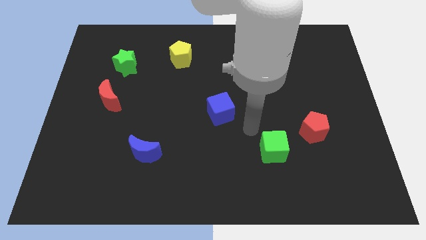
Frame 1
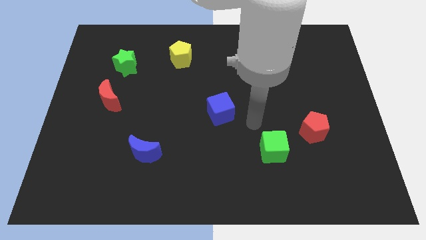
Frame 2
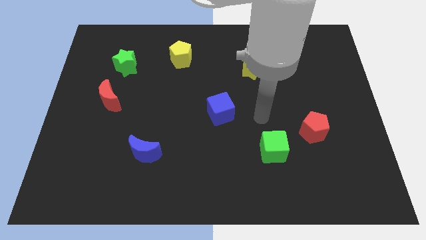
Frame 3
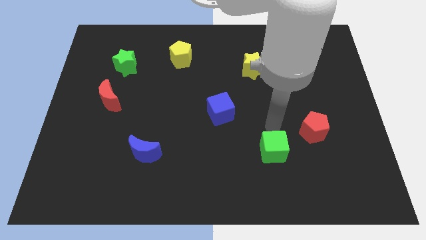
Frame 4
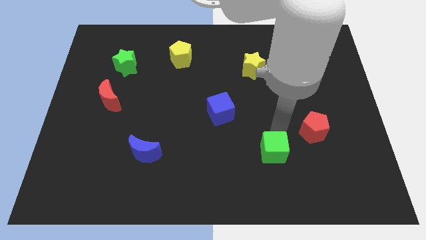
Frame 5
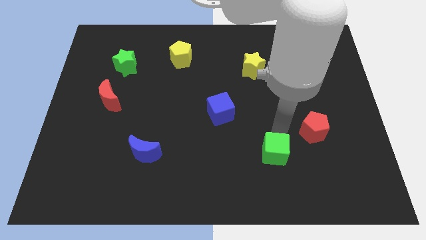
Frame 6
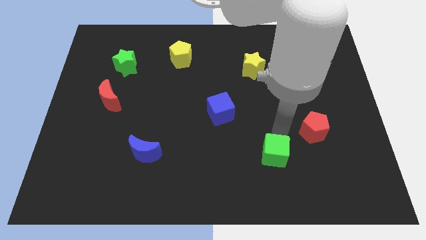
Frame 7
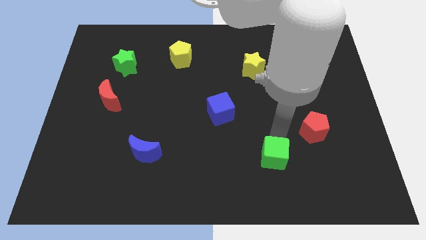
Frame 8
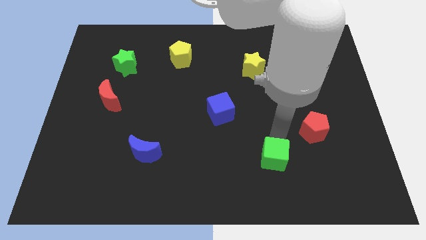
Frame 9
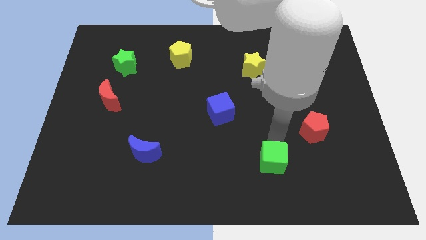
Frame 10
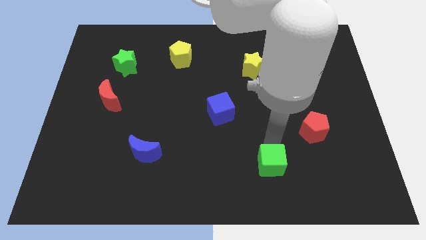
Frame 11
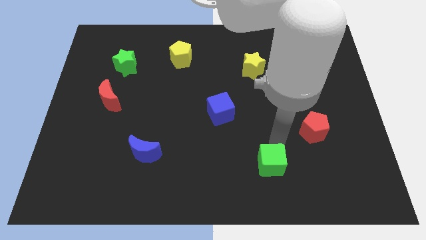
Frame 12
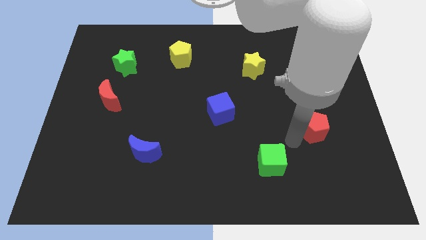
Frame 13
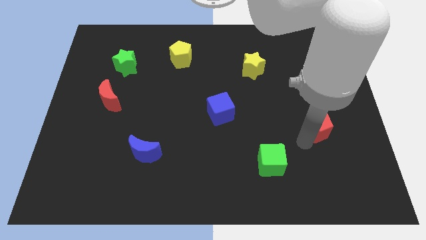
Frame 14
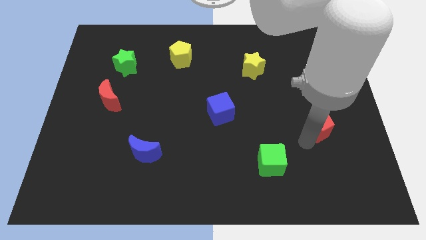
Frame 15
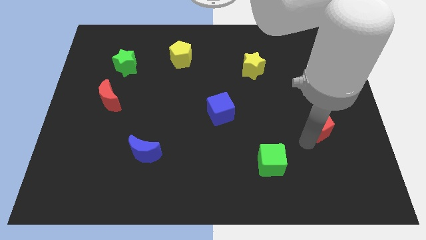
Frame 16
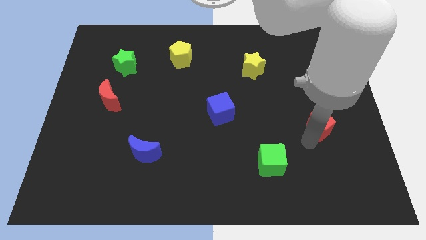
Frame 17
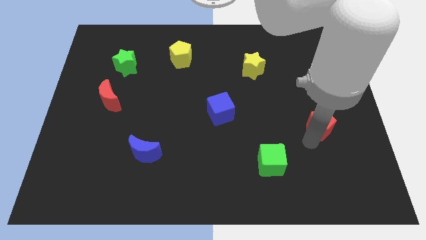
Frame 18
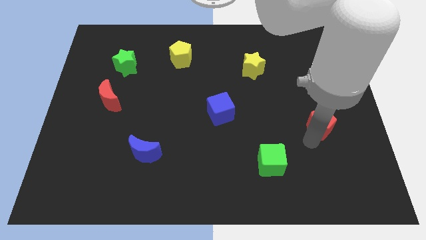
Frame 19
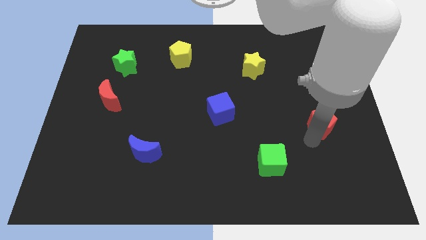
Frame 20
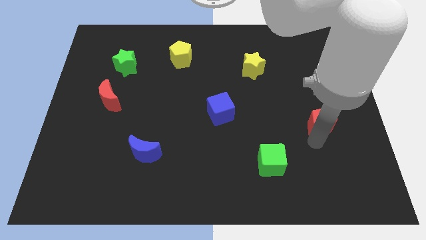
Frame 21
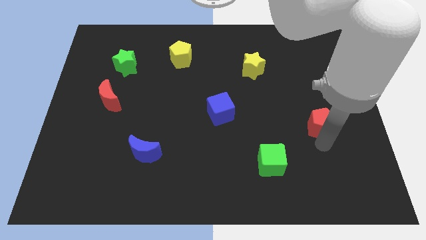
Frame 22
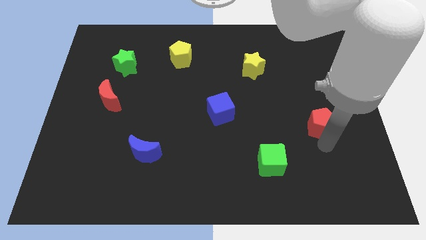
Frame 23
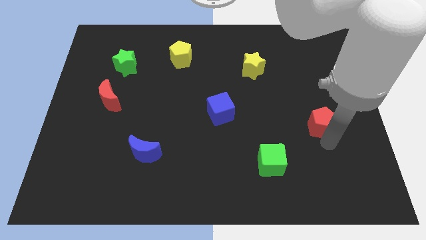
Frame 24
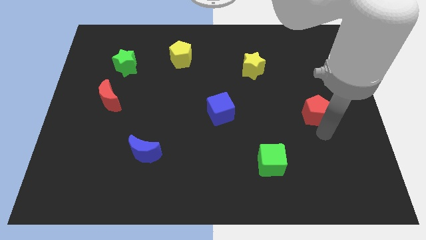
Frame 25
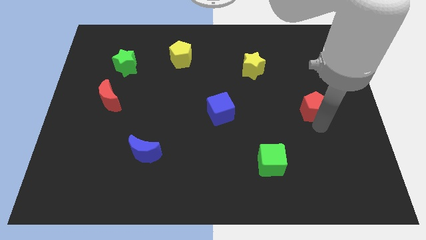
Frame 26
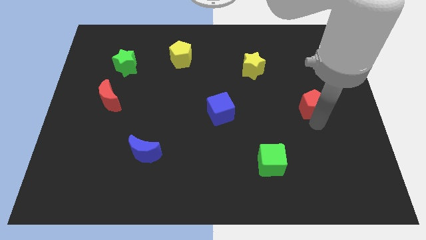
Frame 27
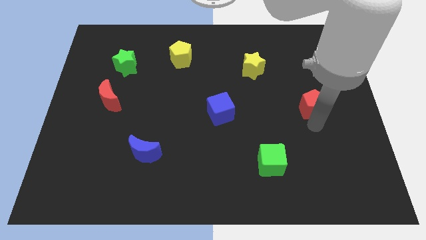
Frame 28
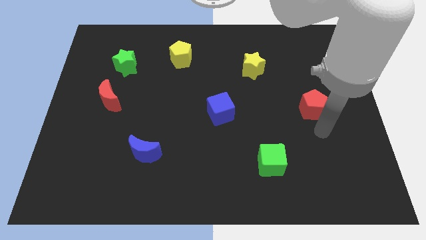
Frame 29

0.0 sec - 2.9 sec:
place the red pentagon right to the blue cube

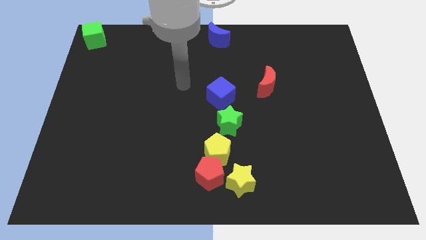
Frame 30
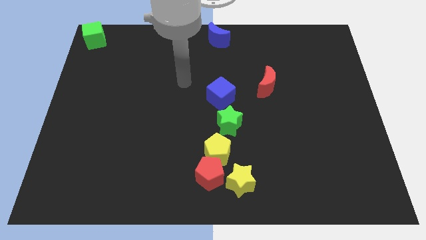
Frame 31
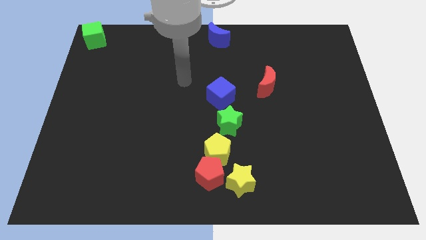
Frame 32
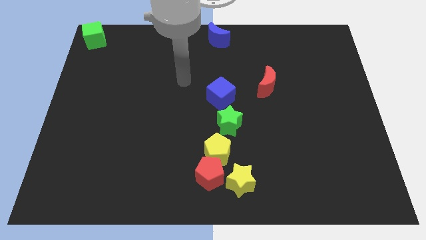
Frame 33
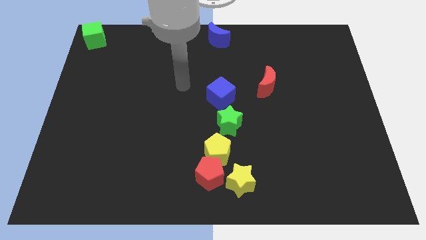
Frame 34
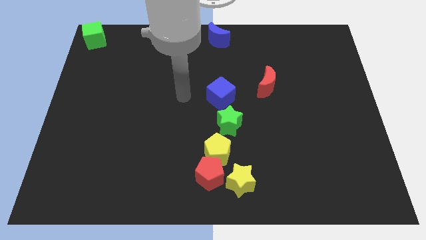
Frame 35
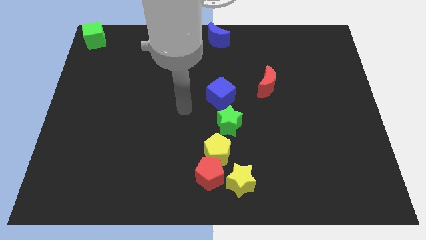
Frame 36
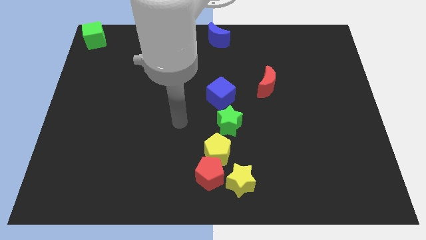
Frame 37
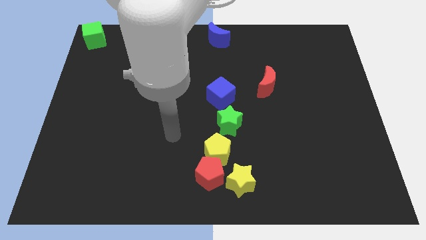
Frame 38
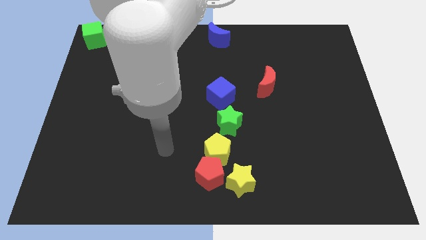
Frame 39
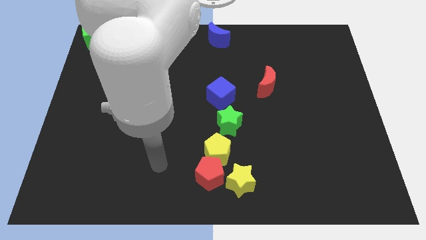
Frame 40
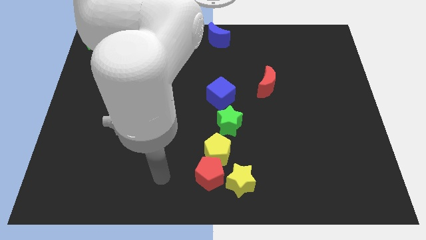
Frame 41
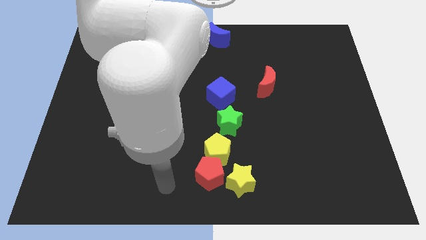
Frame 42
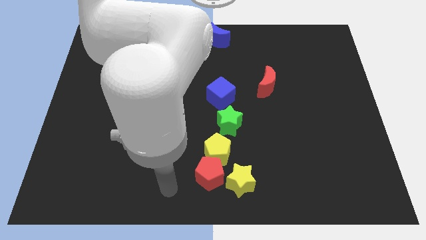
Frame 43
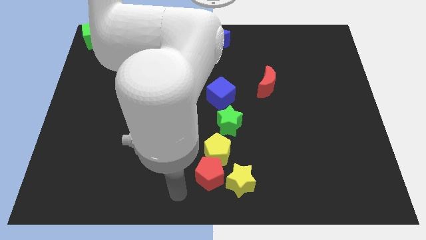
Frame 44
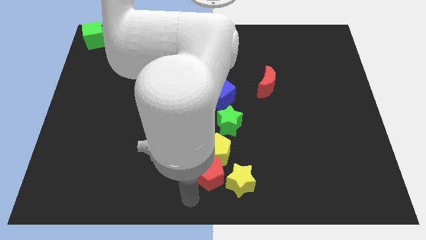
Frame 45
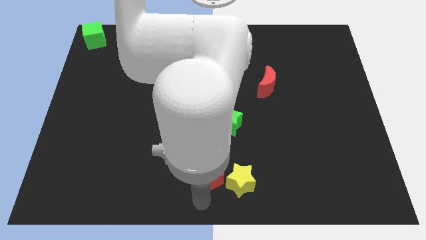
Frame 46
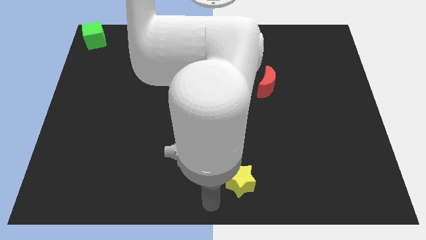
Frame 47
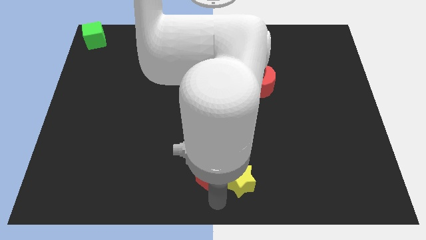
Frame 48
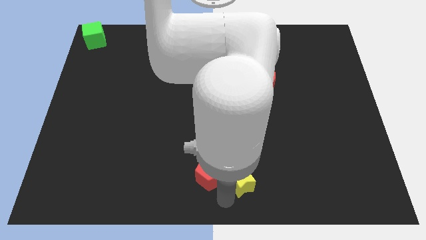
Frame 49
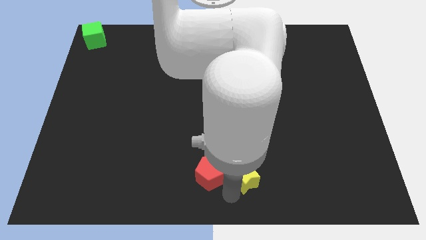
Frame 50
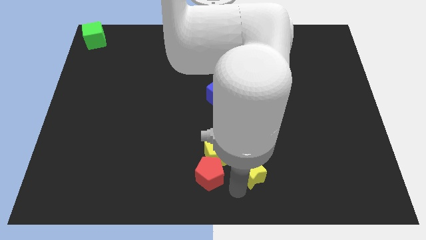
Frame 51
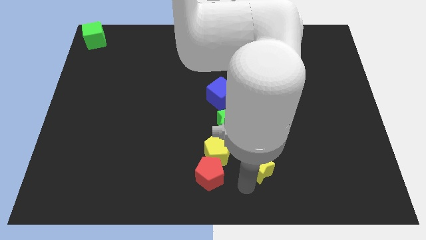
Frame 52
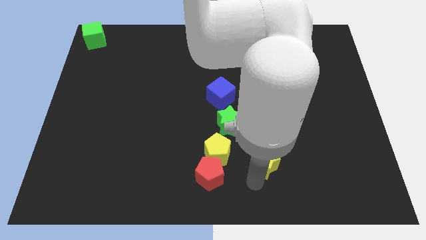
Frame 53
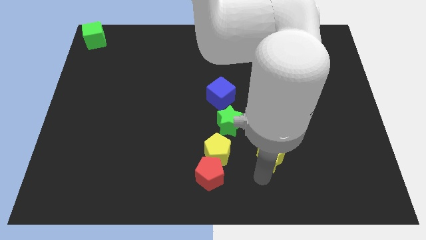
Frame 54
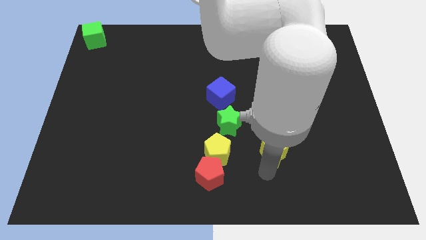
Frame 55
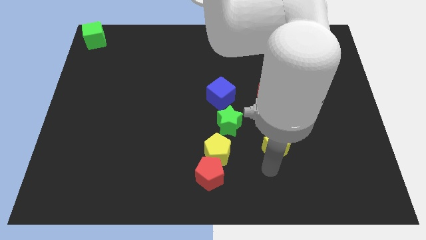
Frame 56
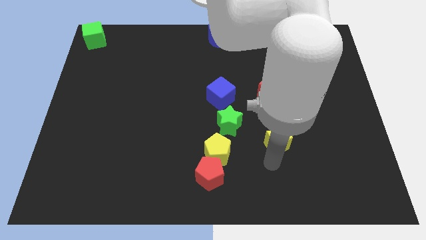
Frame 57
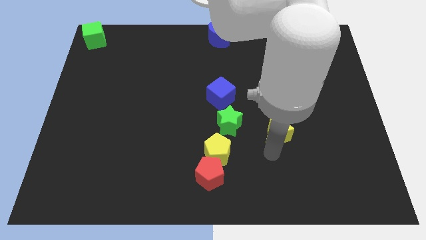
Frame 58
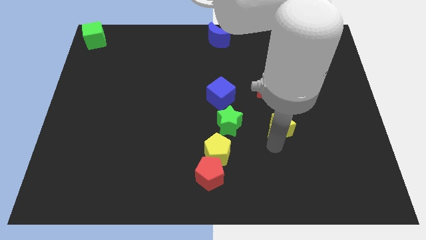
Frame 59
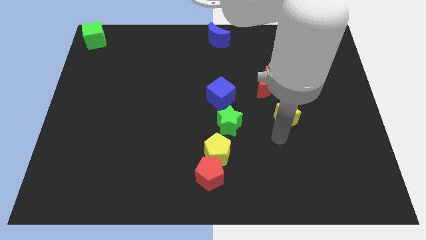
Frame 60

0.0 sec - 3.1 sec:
move your arm and move the yellow star to the right of green star

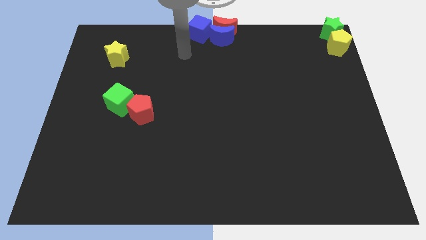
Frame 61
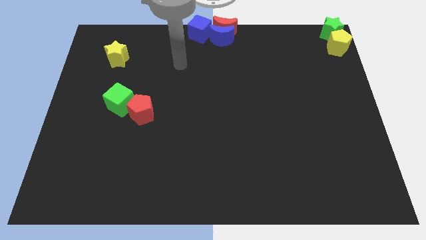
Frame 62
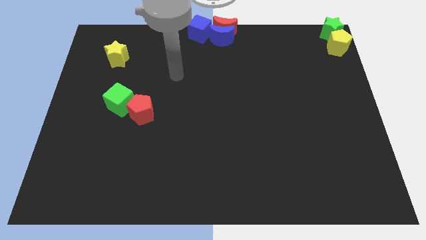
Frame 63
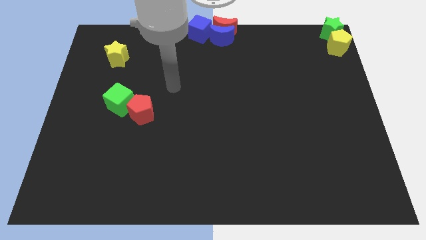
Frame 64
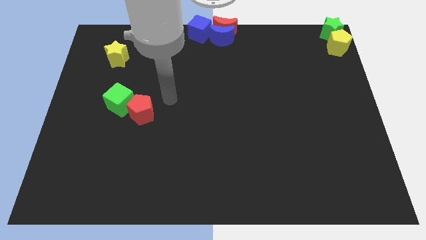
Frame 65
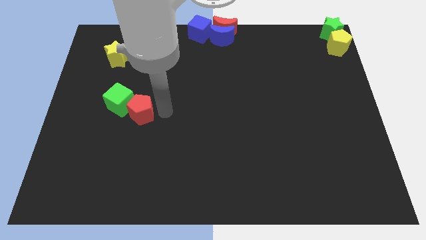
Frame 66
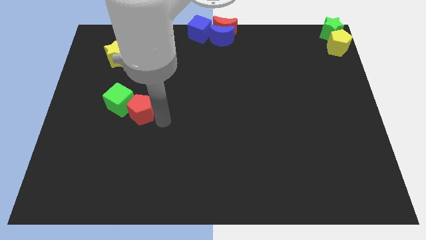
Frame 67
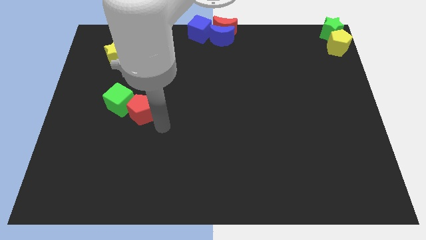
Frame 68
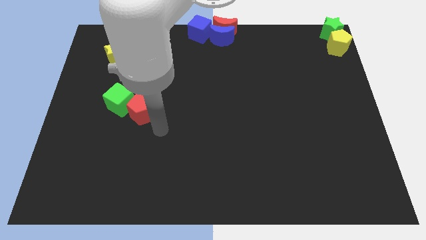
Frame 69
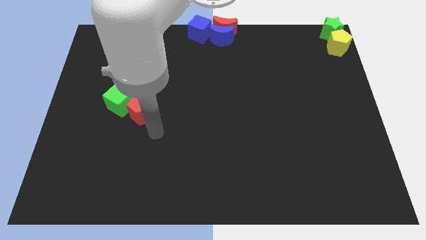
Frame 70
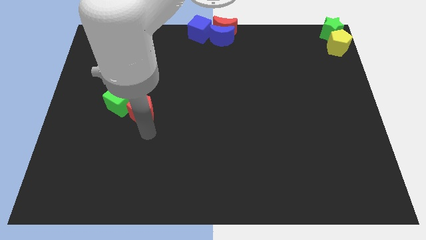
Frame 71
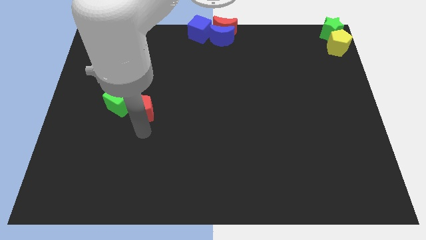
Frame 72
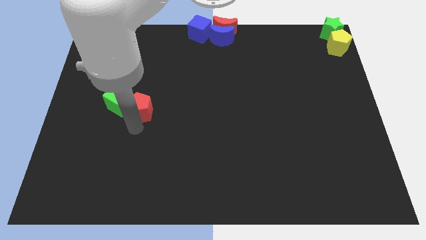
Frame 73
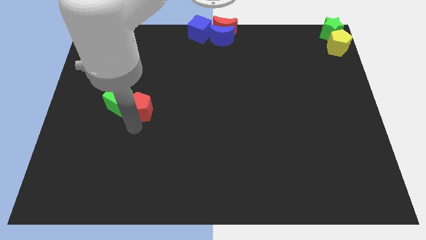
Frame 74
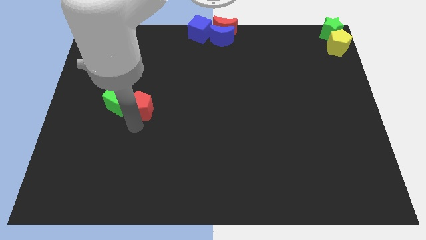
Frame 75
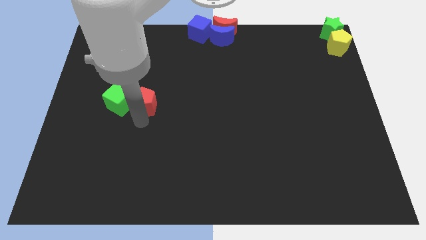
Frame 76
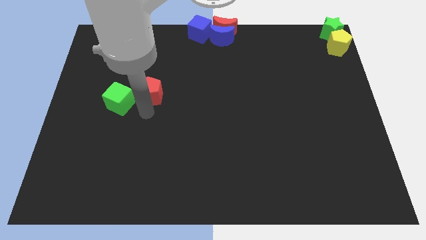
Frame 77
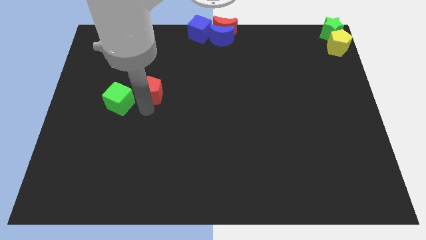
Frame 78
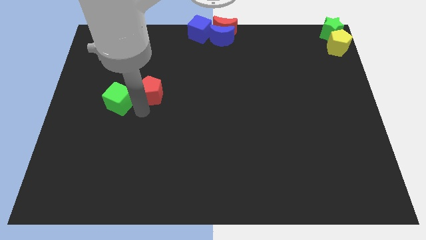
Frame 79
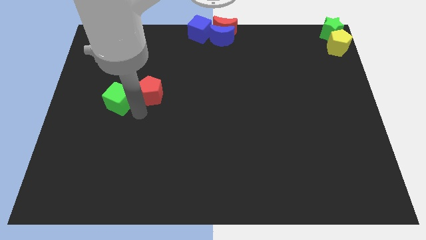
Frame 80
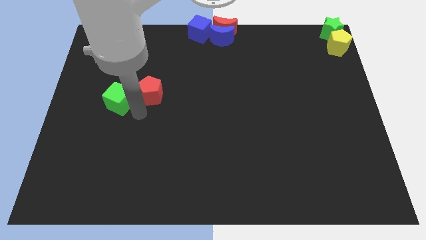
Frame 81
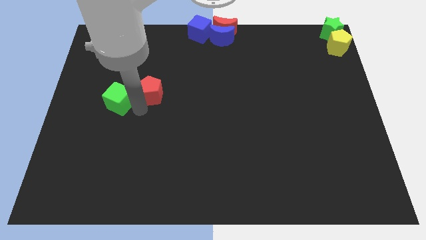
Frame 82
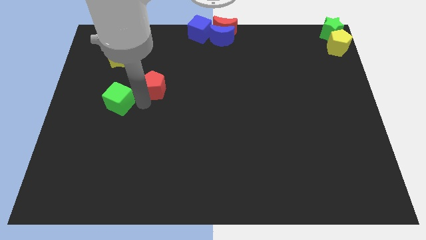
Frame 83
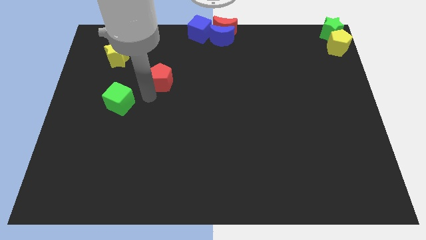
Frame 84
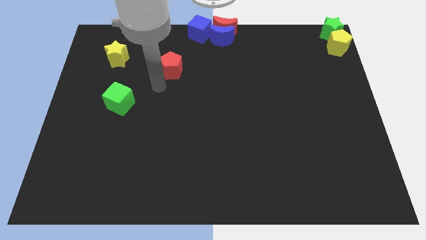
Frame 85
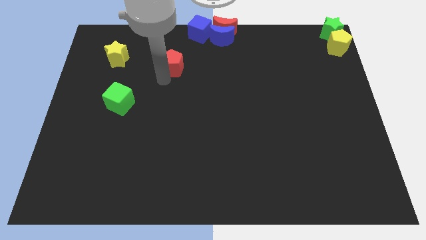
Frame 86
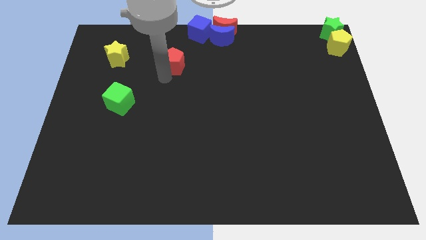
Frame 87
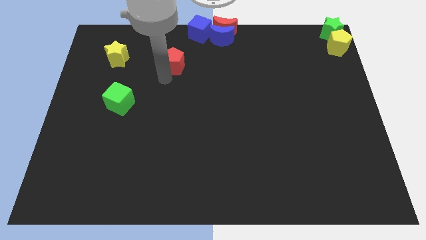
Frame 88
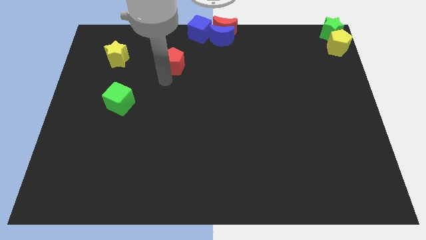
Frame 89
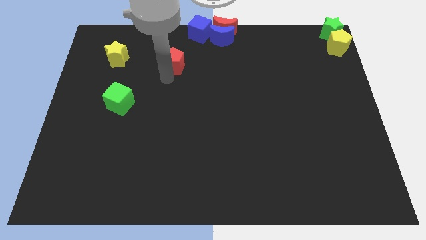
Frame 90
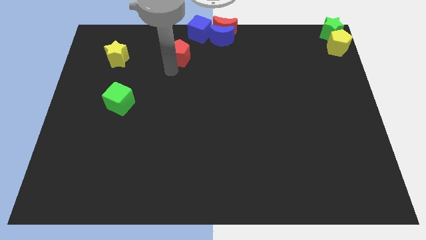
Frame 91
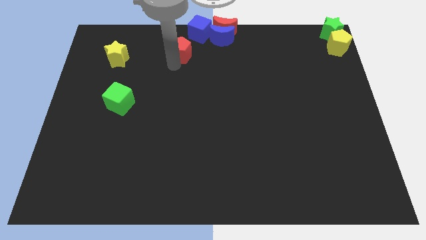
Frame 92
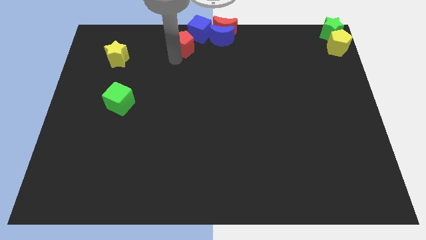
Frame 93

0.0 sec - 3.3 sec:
push the red pentagon away from the green cube
